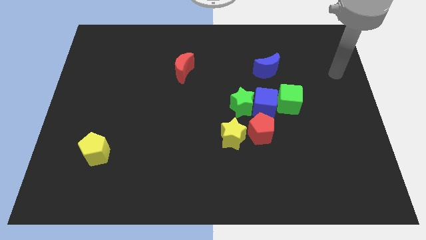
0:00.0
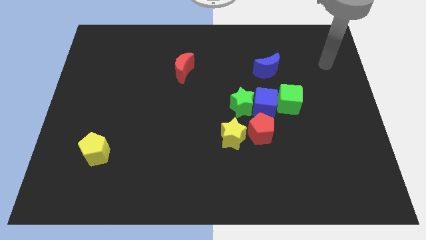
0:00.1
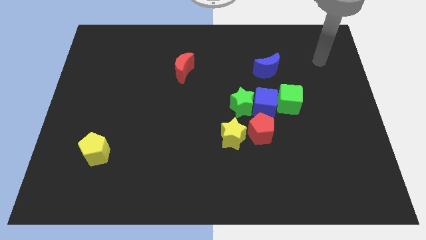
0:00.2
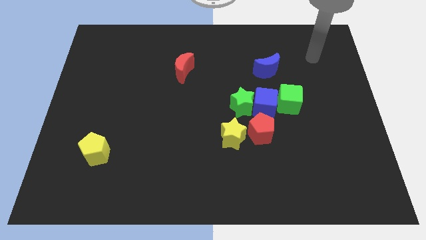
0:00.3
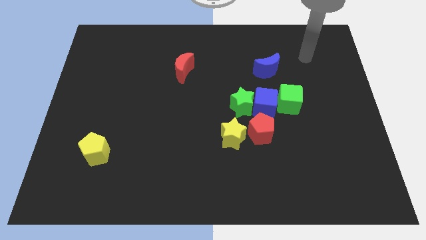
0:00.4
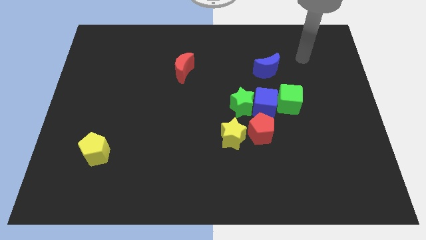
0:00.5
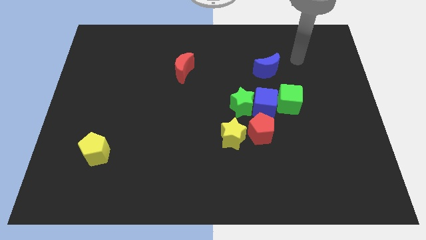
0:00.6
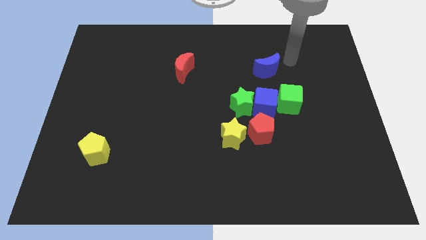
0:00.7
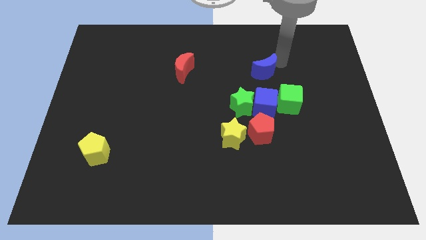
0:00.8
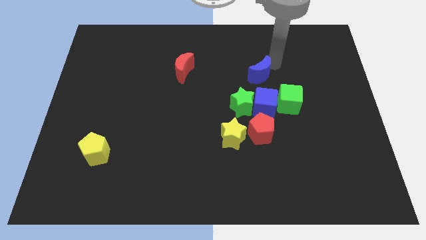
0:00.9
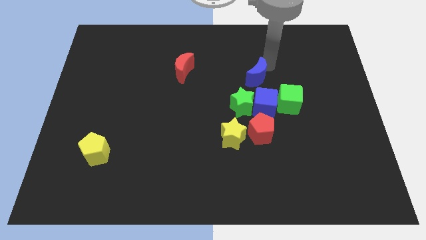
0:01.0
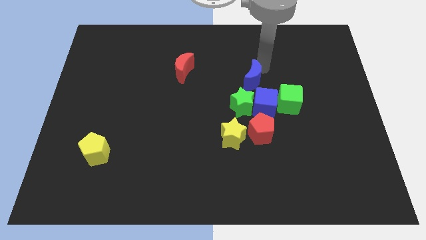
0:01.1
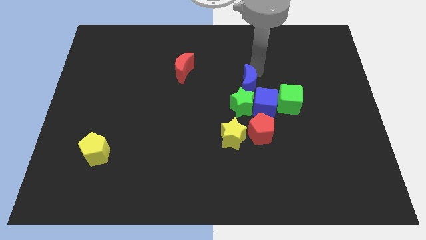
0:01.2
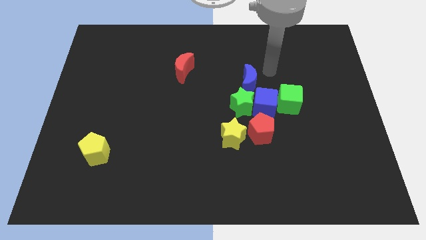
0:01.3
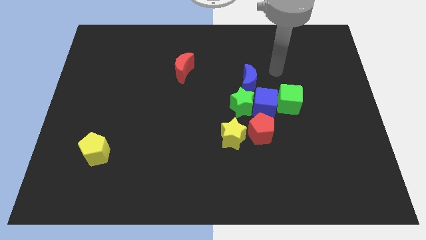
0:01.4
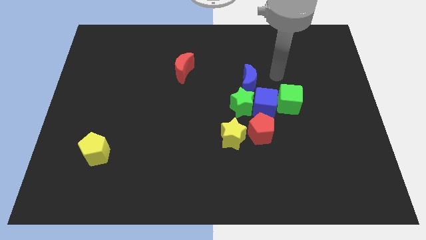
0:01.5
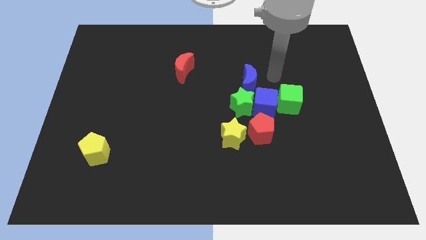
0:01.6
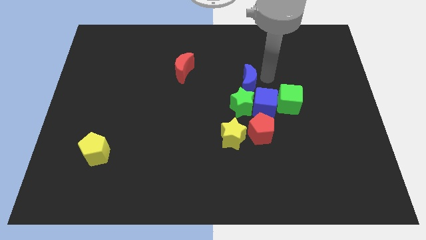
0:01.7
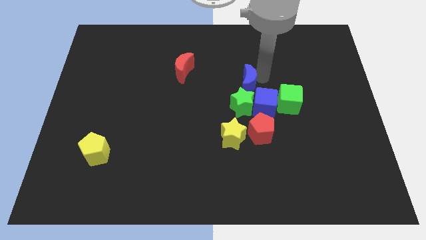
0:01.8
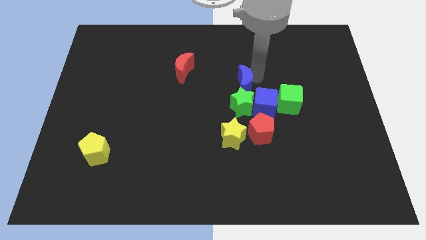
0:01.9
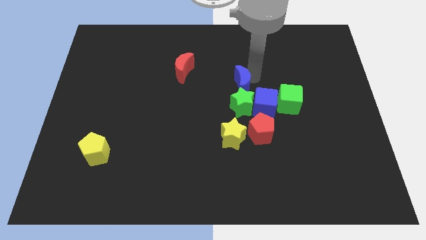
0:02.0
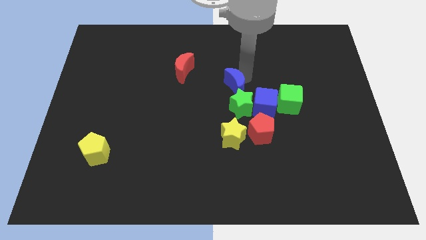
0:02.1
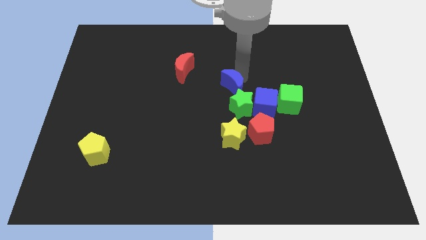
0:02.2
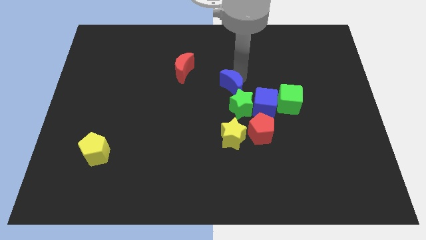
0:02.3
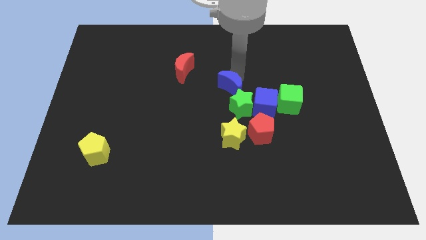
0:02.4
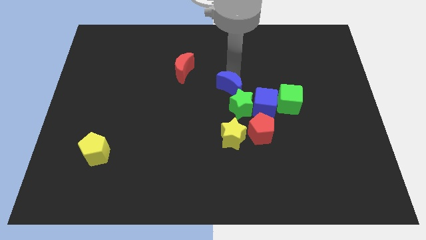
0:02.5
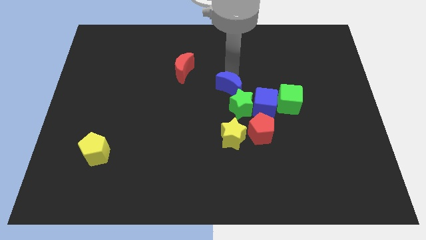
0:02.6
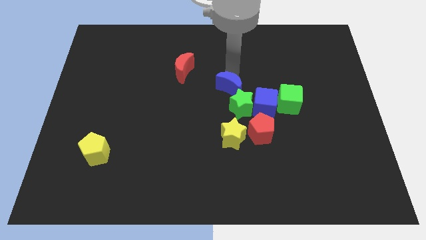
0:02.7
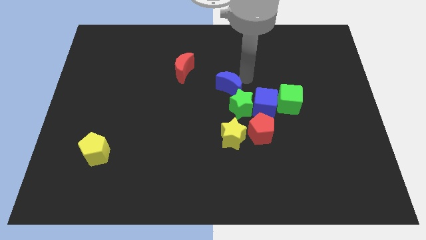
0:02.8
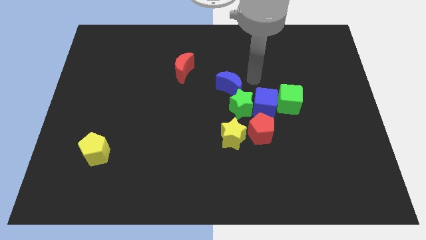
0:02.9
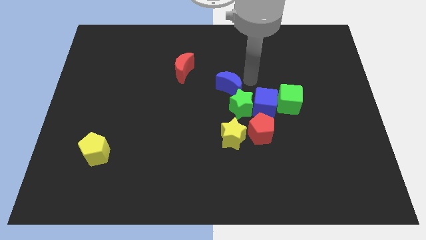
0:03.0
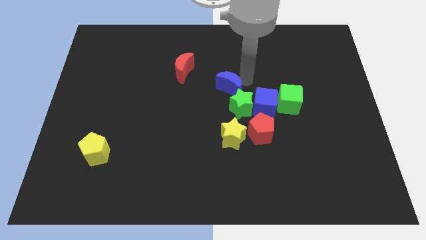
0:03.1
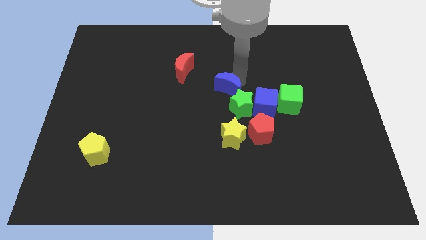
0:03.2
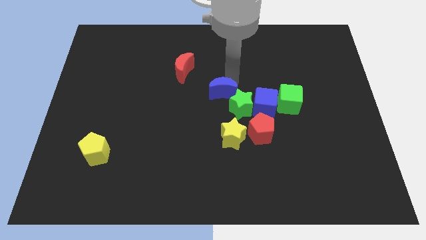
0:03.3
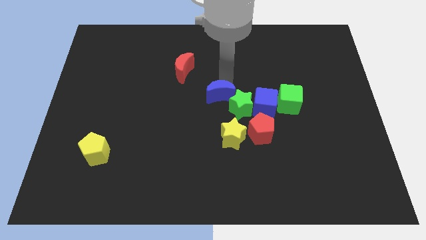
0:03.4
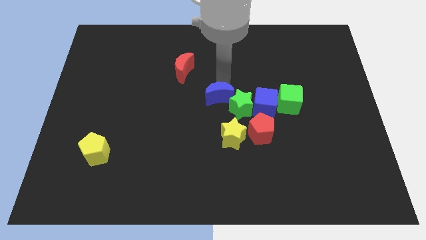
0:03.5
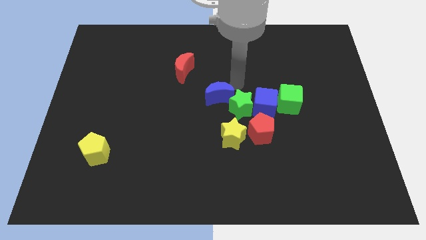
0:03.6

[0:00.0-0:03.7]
place blue moon to the top left of green star

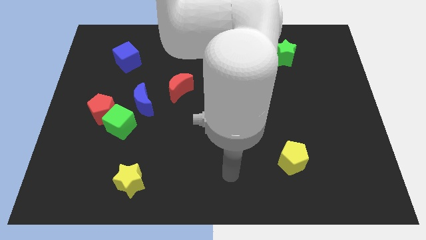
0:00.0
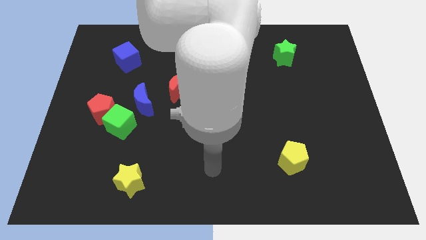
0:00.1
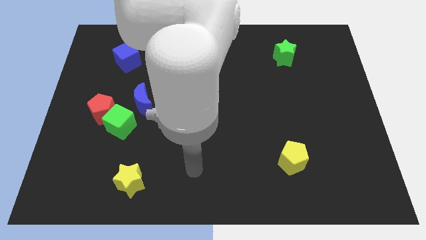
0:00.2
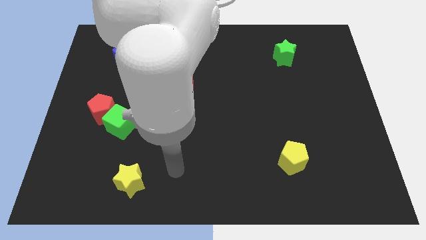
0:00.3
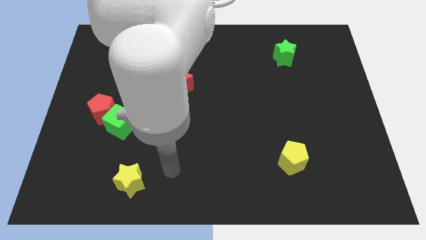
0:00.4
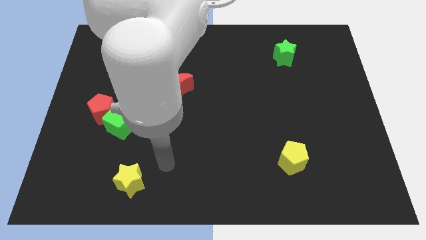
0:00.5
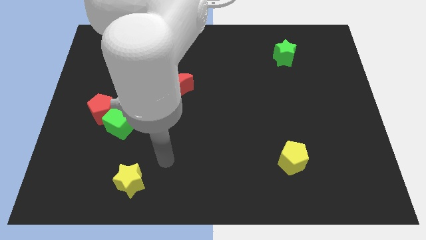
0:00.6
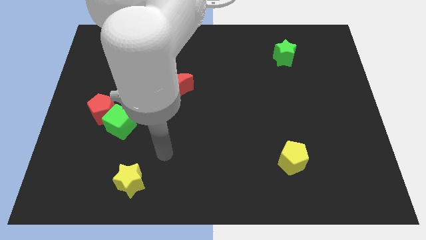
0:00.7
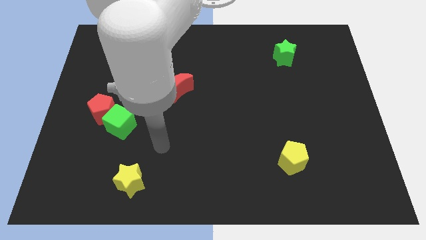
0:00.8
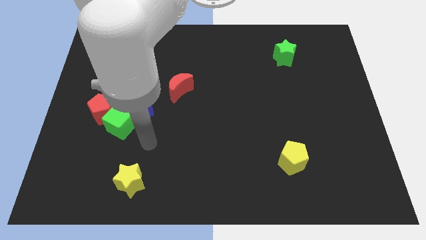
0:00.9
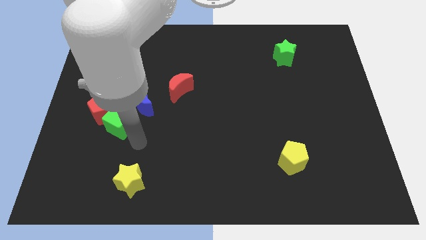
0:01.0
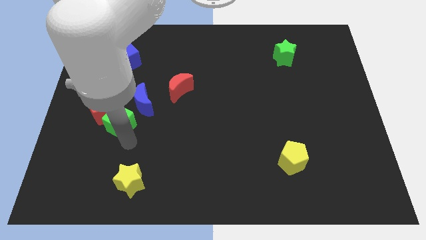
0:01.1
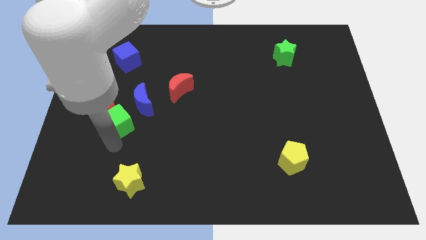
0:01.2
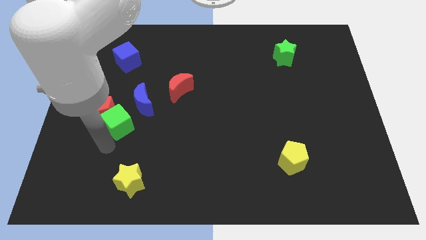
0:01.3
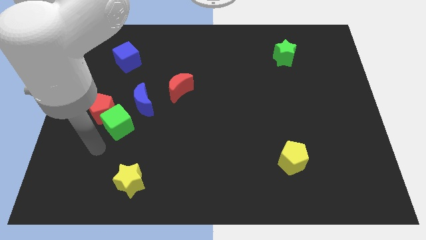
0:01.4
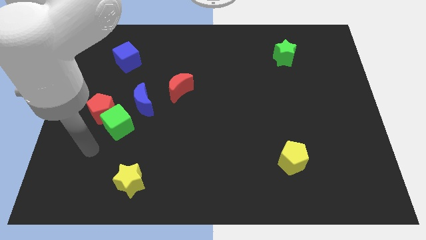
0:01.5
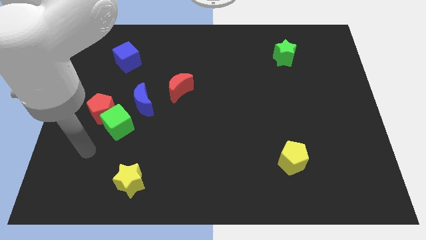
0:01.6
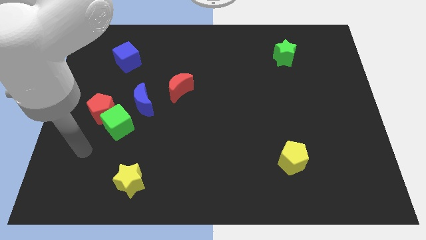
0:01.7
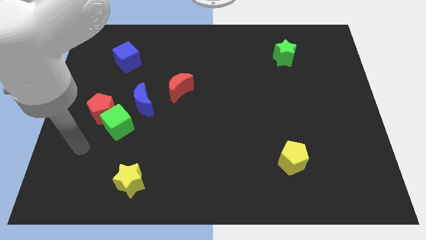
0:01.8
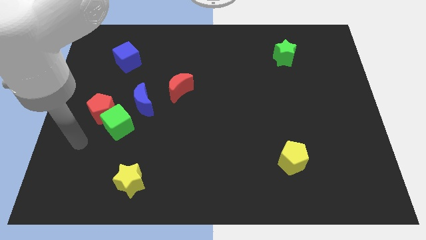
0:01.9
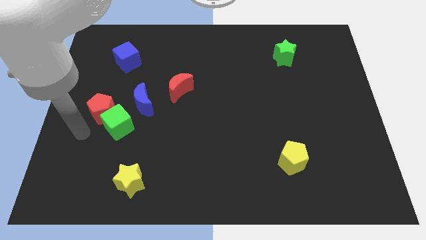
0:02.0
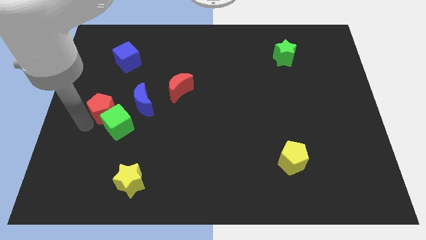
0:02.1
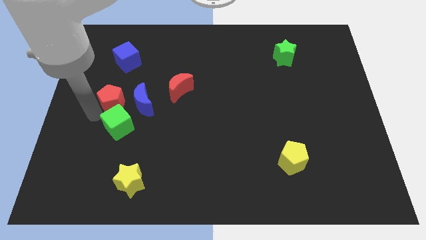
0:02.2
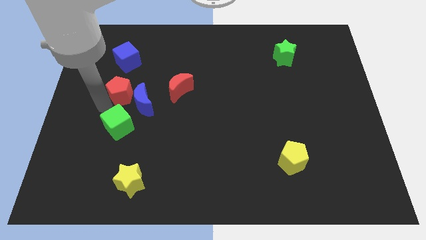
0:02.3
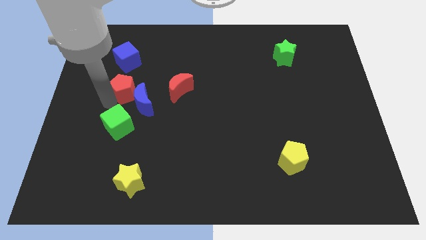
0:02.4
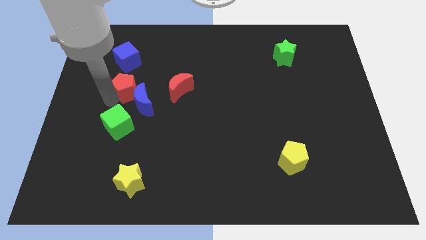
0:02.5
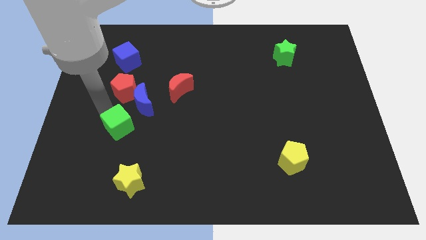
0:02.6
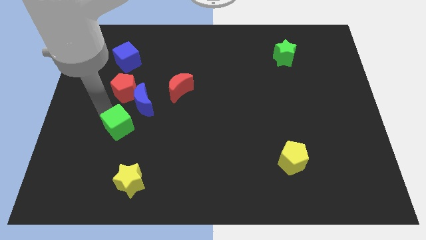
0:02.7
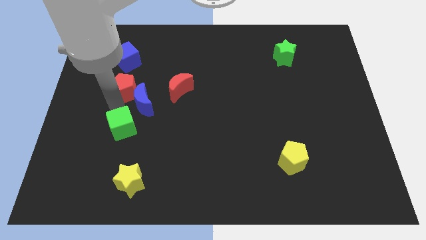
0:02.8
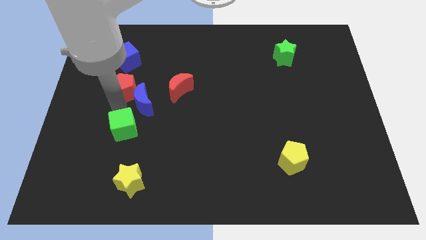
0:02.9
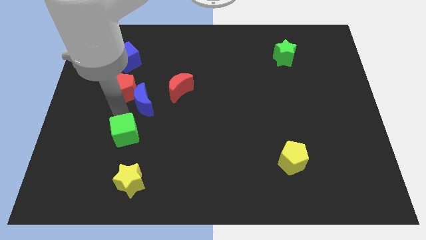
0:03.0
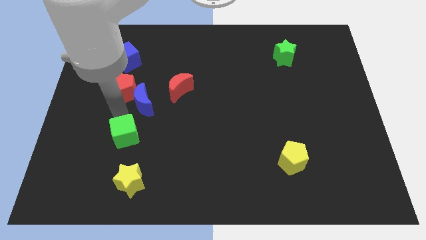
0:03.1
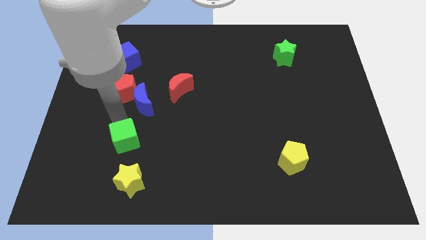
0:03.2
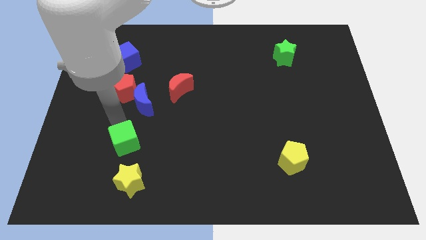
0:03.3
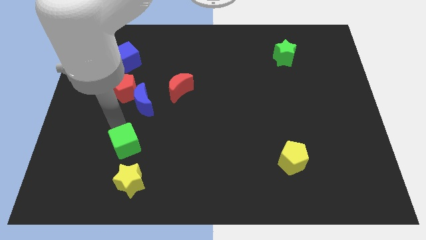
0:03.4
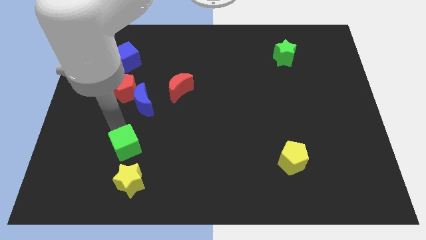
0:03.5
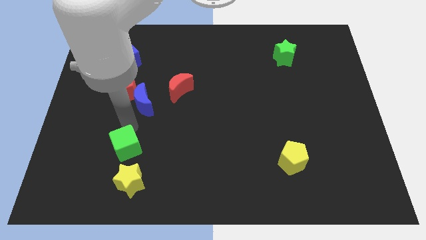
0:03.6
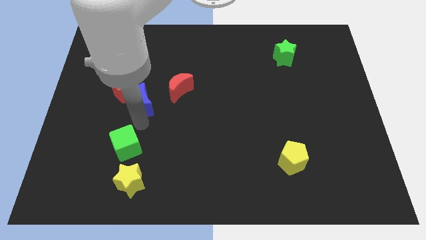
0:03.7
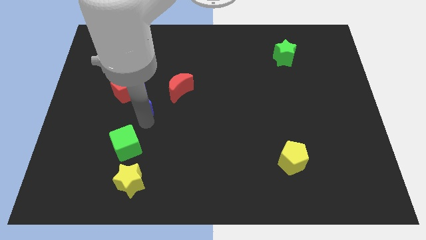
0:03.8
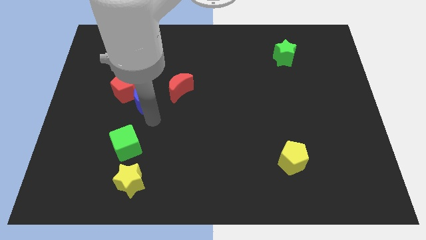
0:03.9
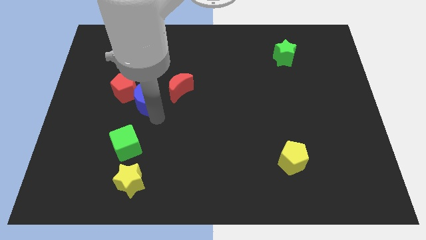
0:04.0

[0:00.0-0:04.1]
push the green cube towards yellow star

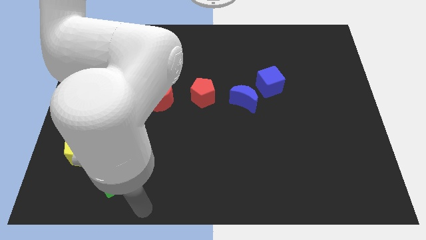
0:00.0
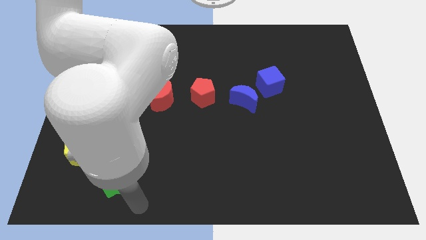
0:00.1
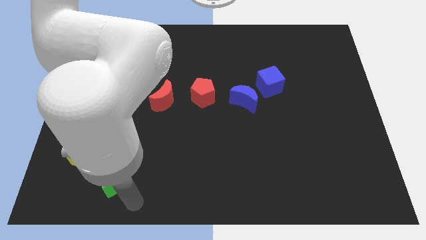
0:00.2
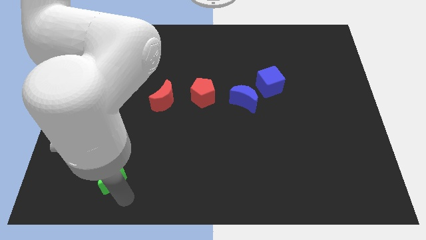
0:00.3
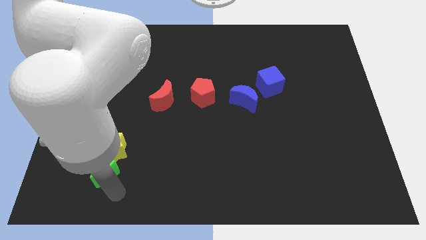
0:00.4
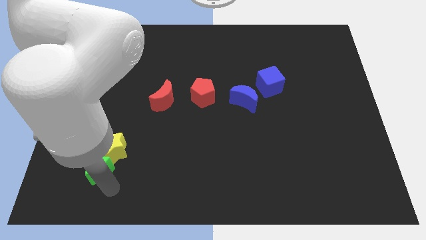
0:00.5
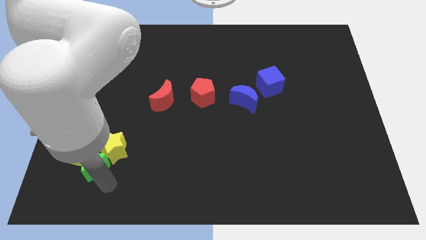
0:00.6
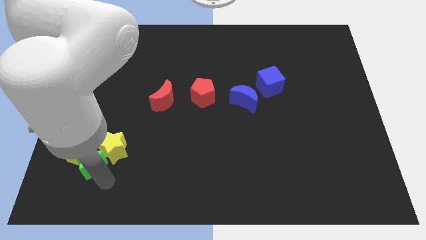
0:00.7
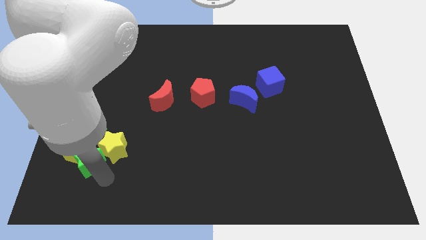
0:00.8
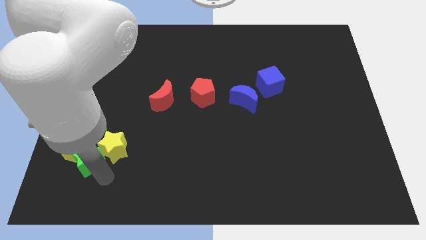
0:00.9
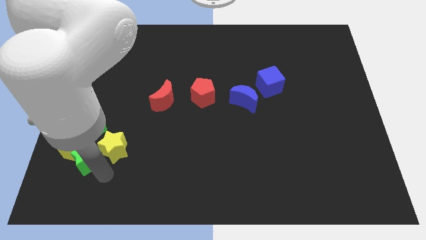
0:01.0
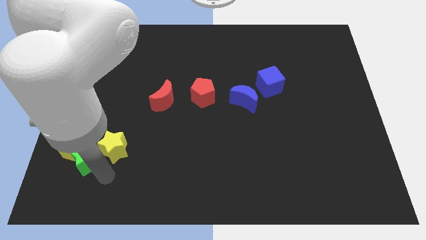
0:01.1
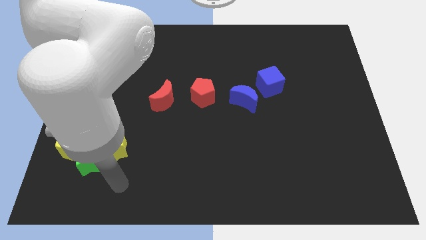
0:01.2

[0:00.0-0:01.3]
move the green star left beside the yellow star
